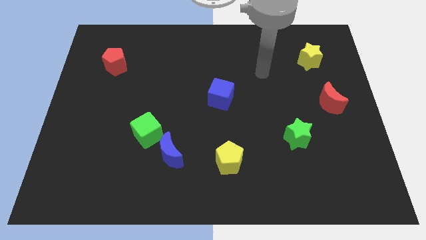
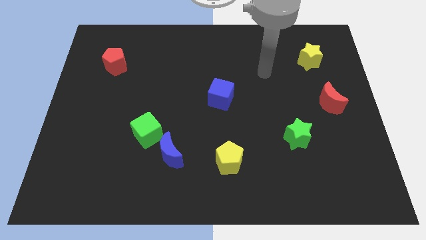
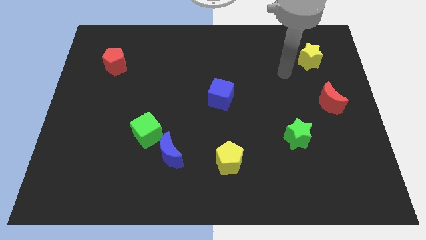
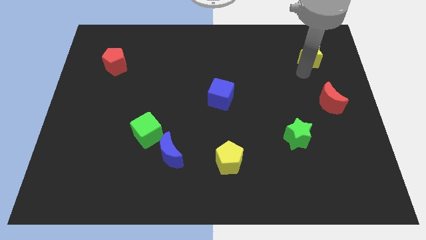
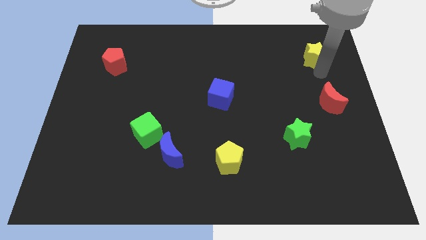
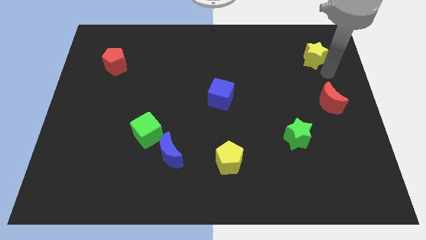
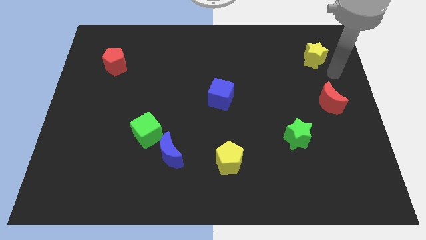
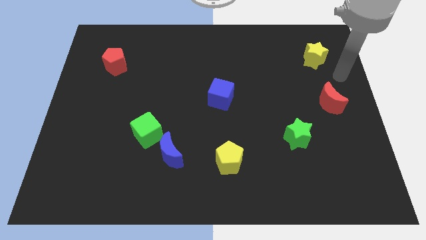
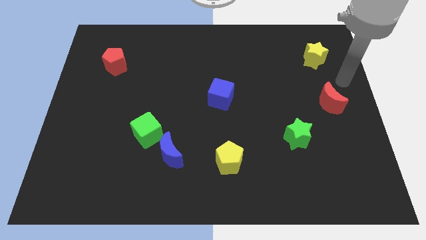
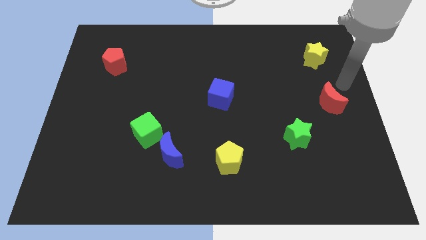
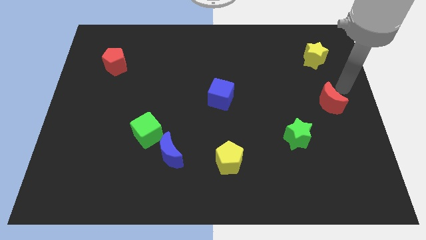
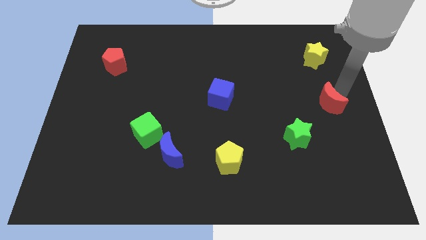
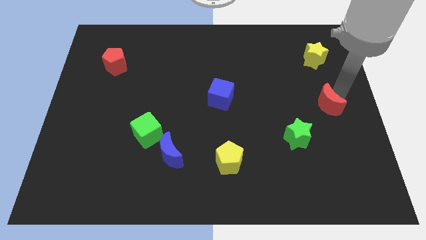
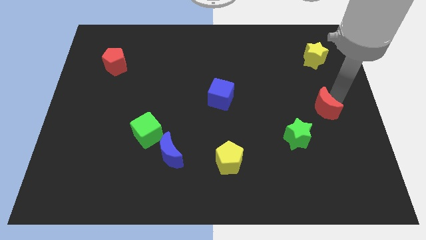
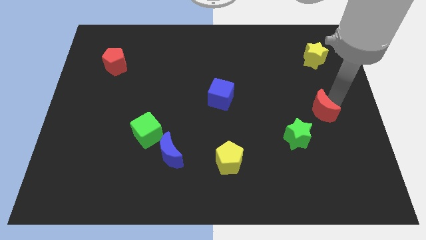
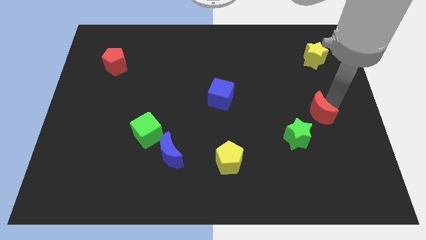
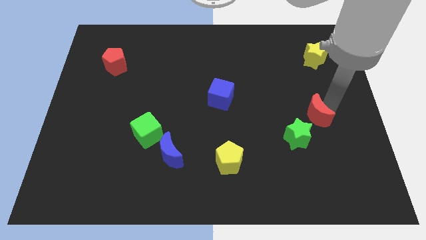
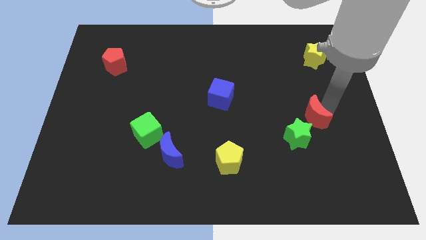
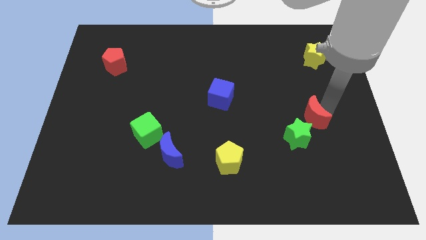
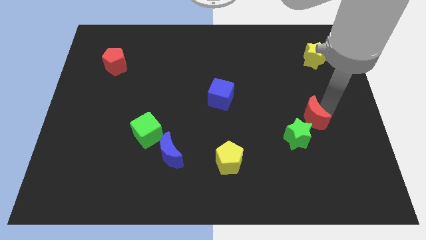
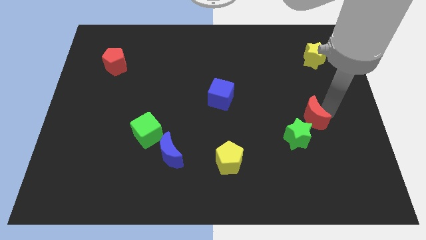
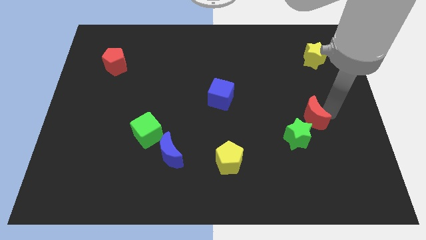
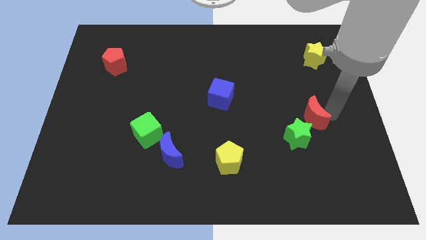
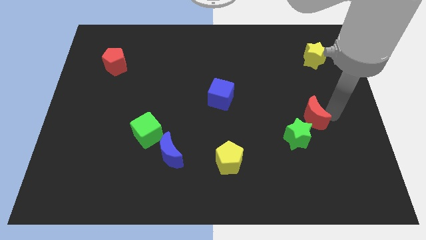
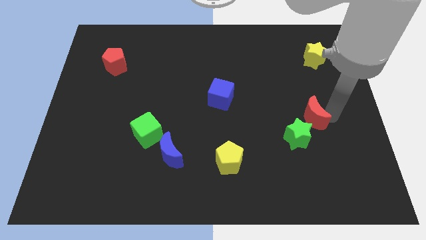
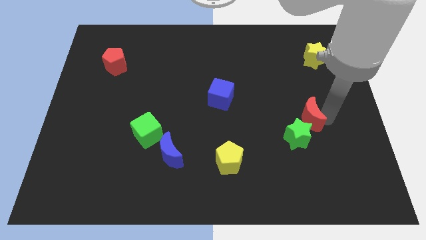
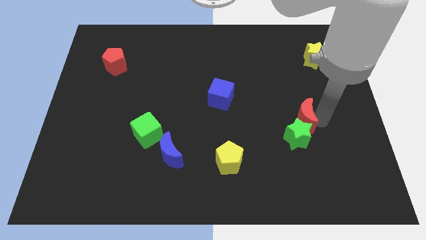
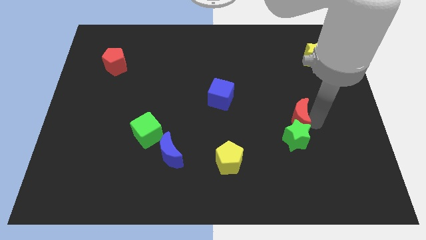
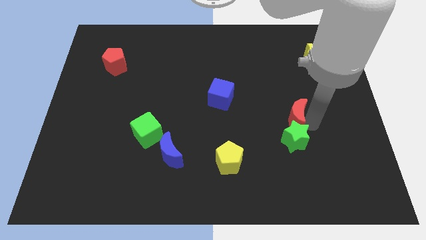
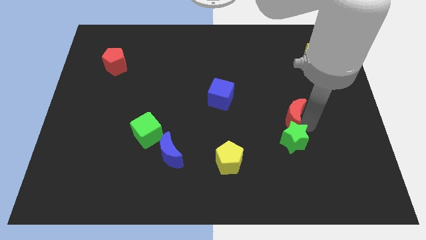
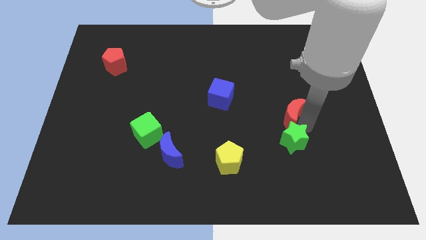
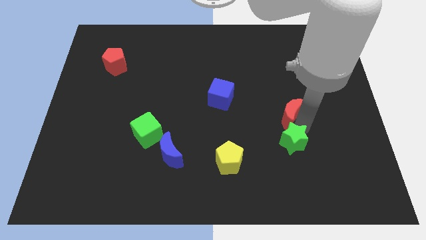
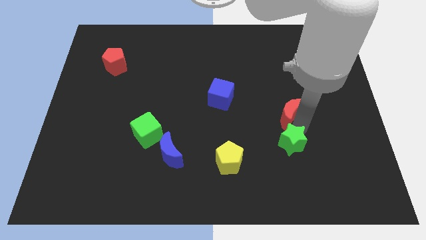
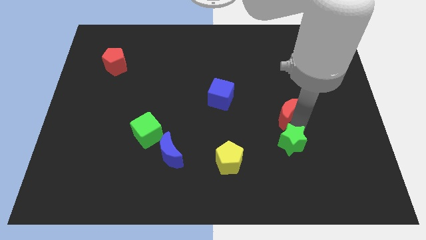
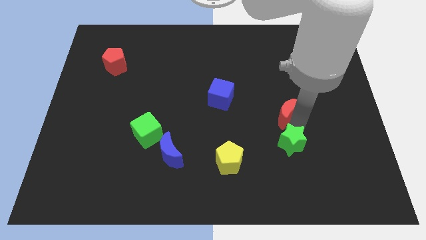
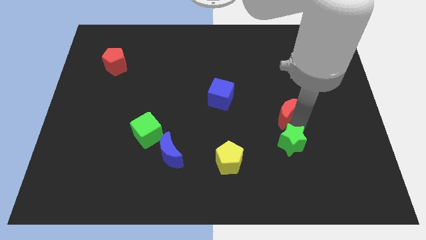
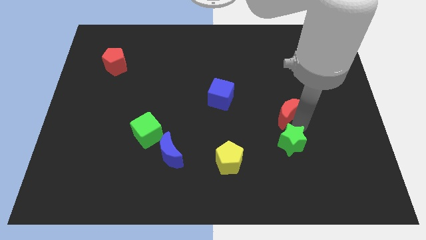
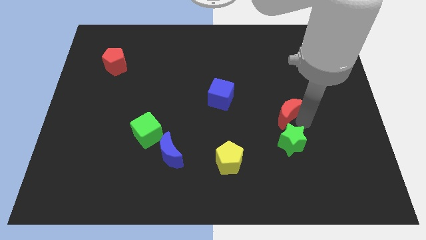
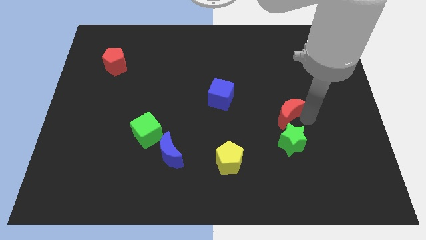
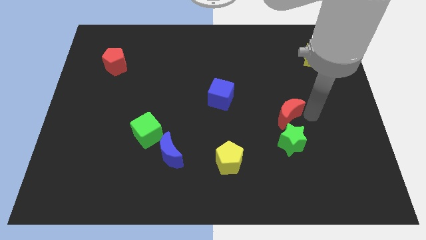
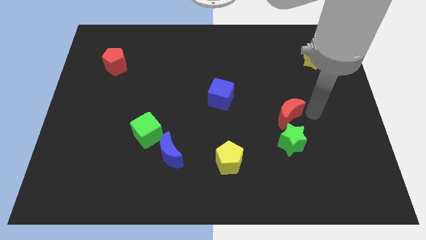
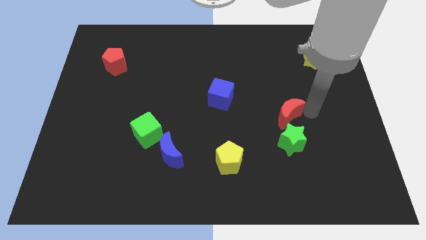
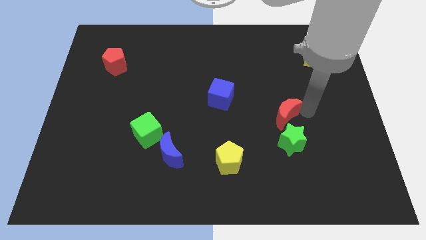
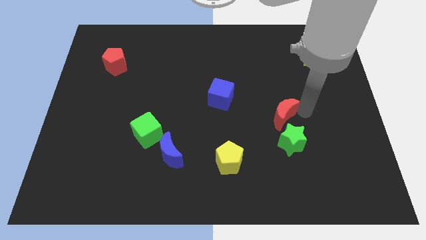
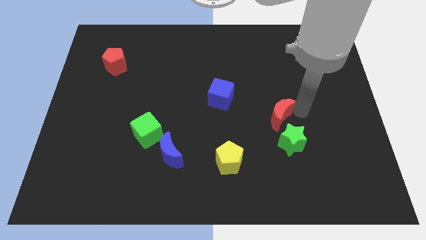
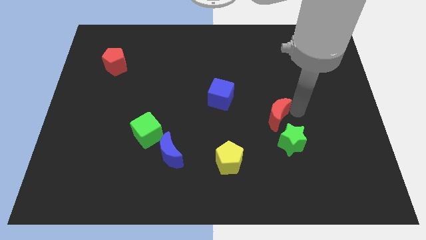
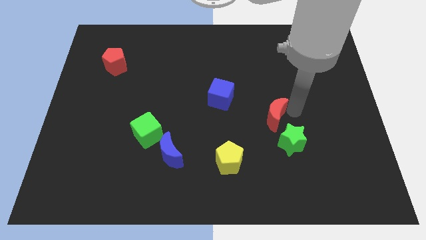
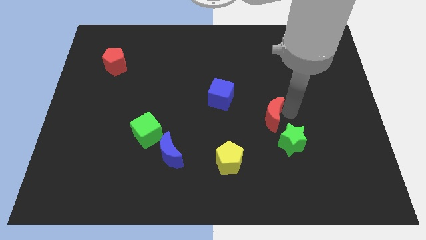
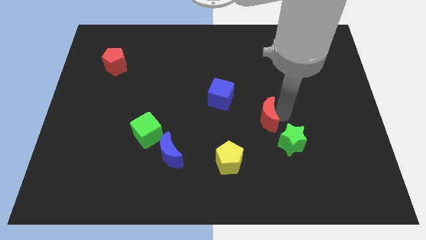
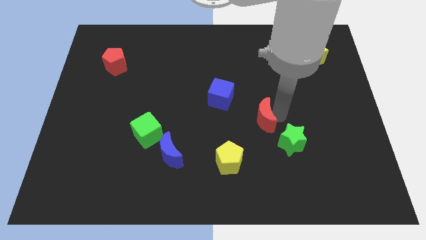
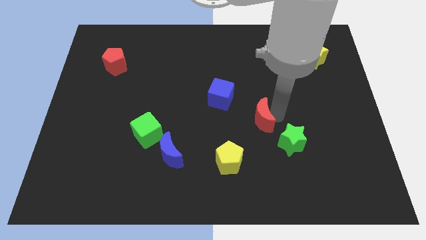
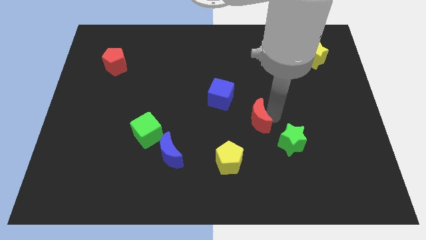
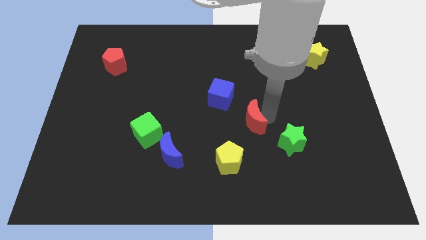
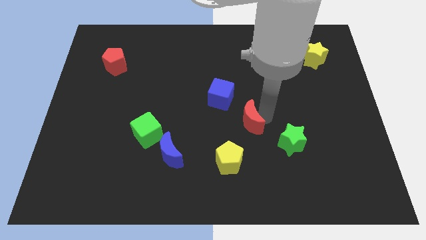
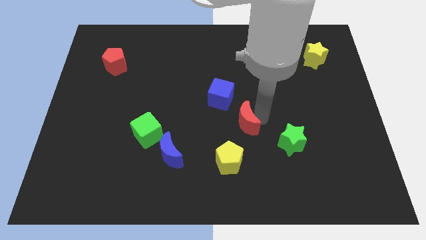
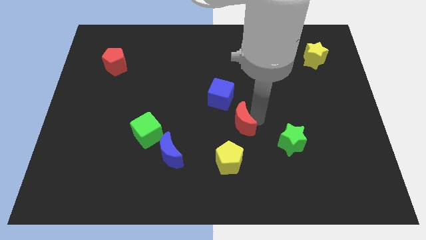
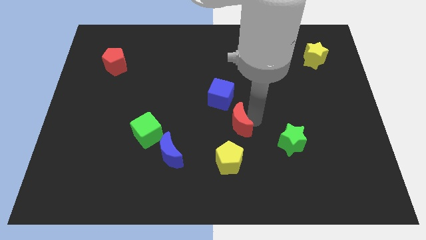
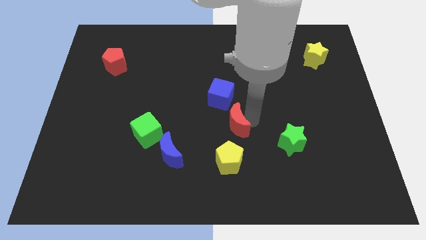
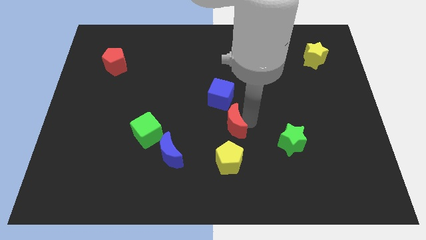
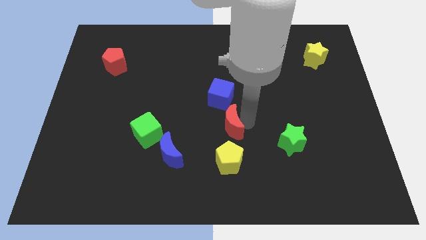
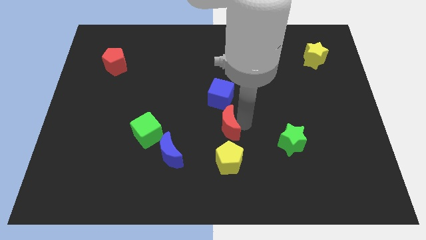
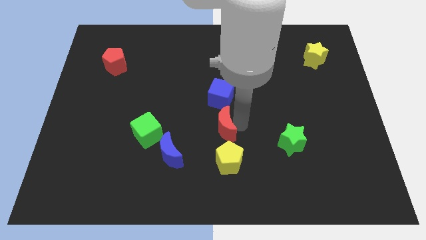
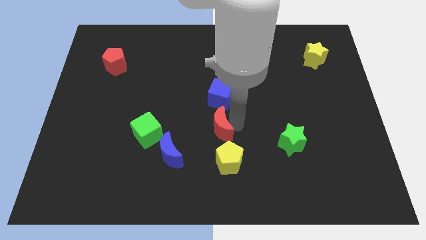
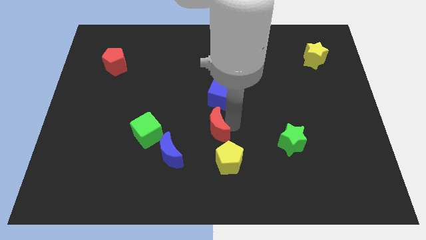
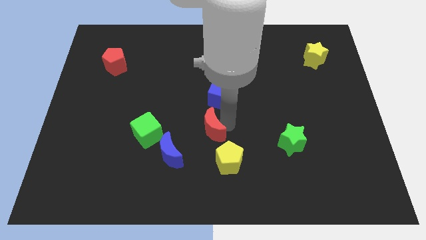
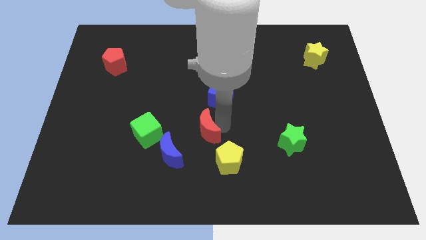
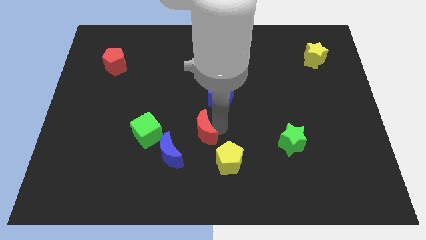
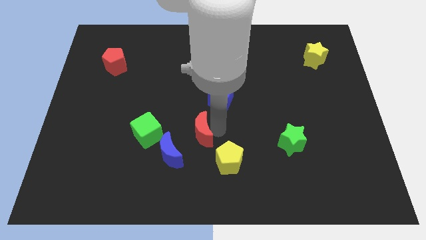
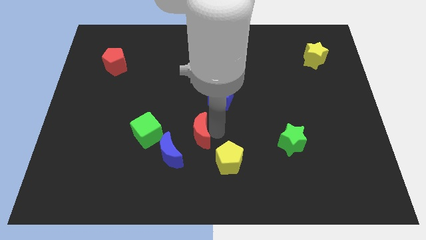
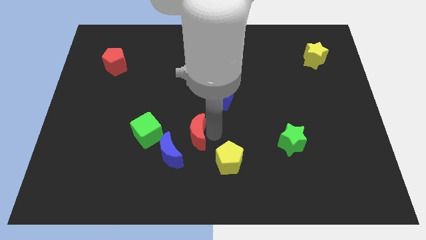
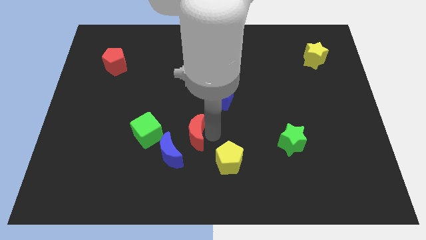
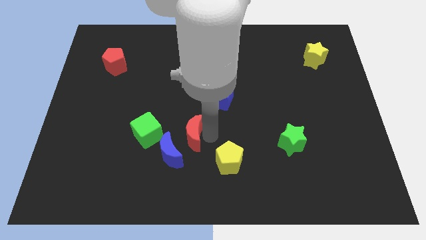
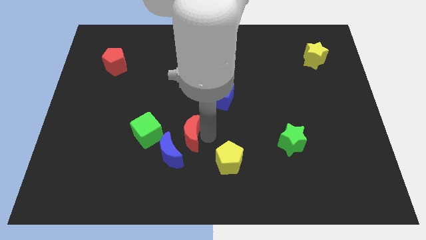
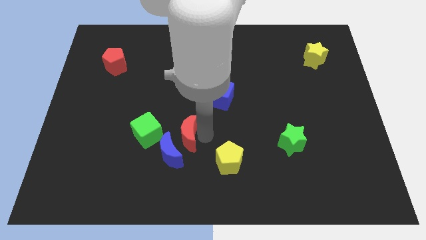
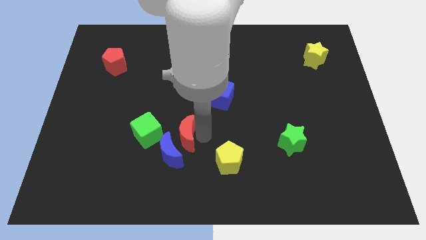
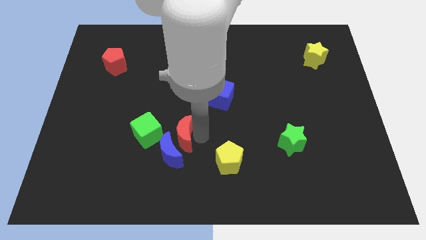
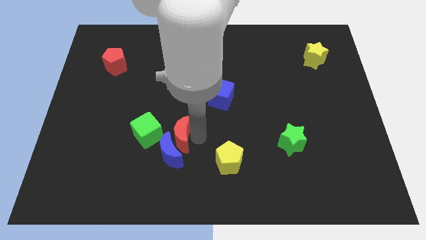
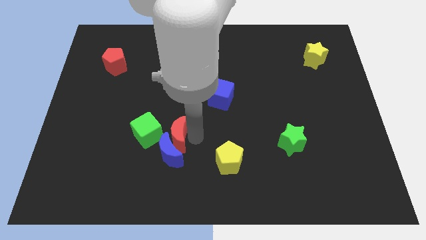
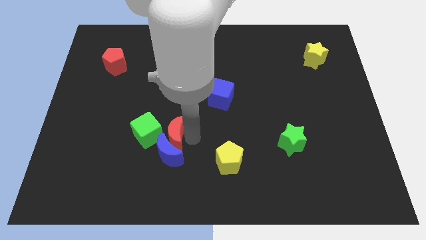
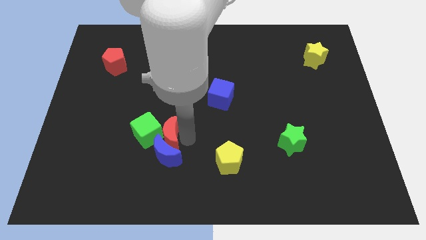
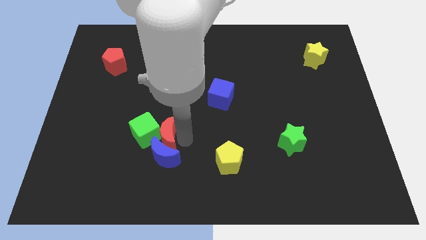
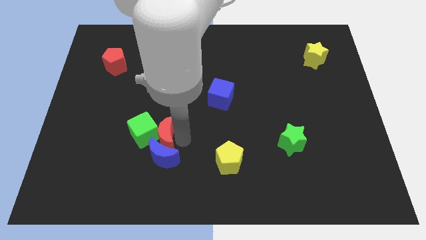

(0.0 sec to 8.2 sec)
slide the red moon close to the green cube

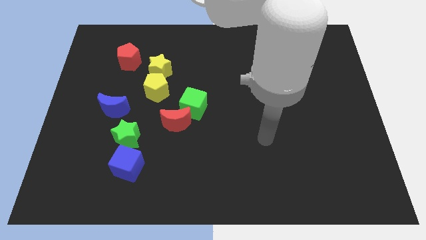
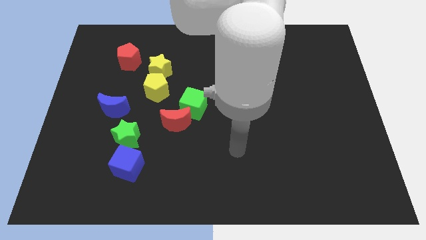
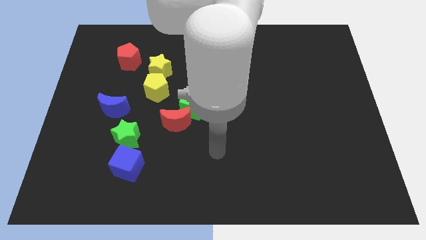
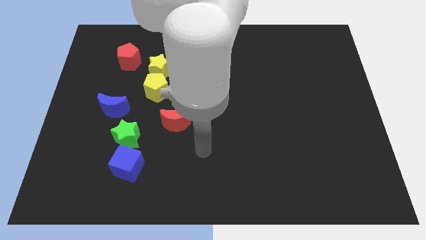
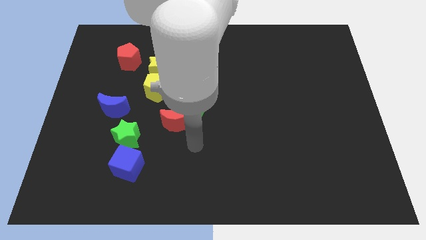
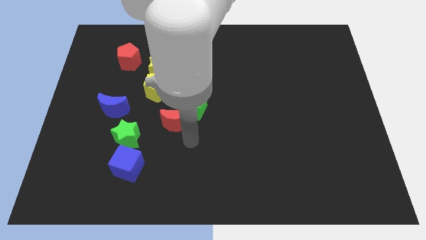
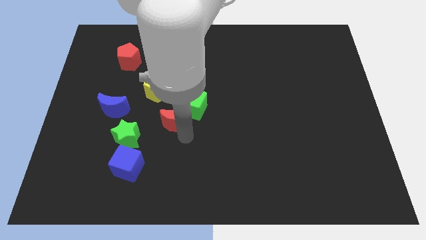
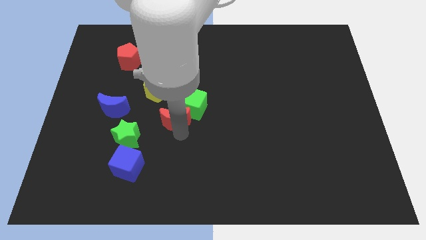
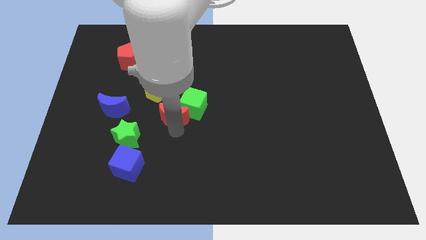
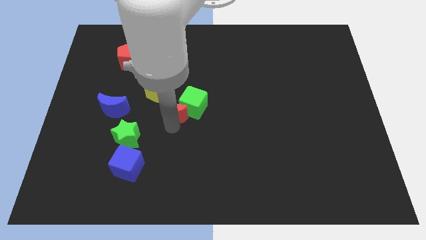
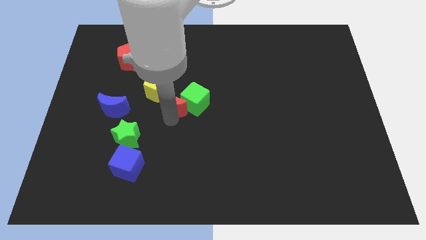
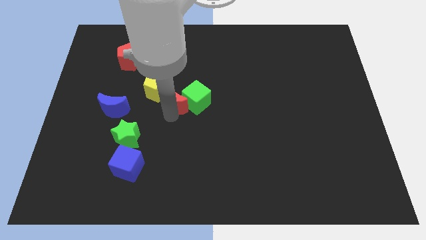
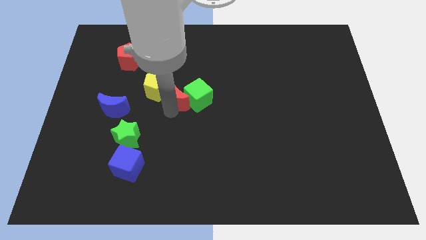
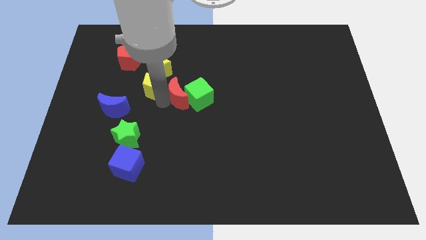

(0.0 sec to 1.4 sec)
push the red moon towards the yellow pentagon
